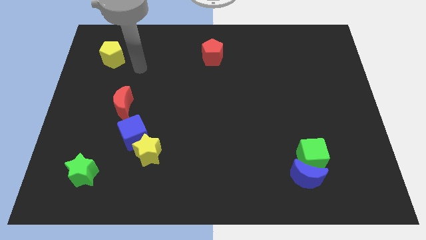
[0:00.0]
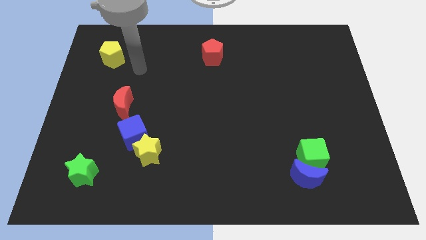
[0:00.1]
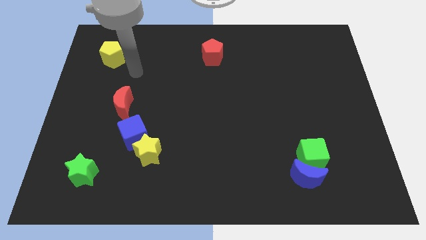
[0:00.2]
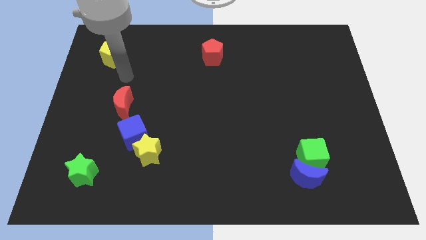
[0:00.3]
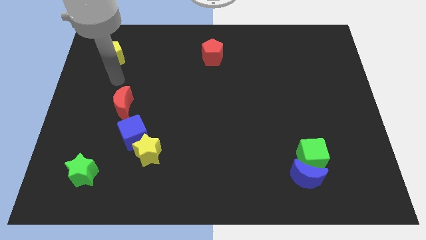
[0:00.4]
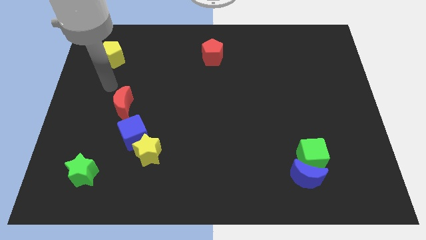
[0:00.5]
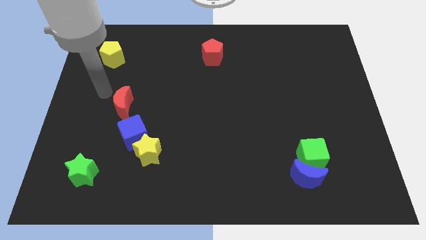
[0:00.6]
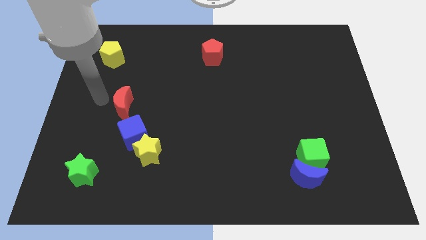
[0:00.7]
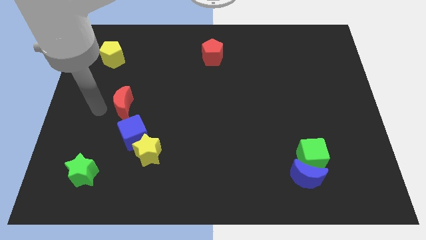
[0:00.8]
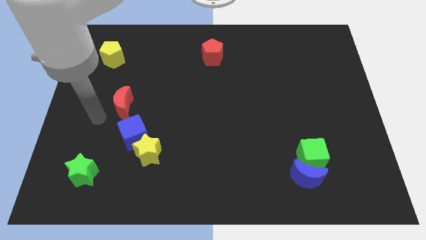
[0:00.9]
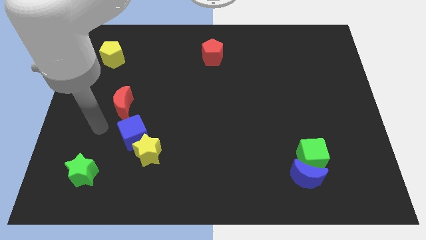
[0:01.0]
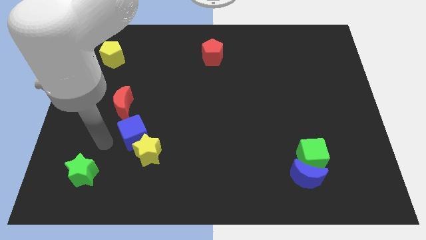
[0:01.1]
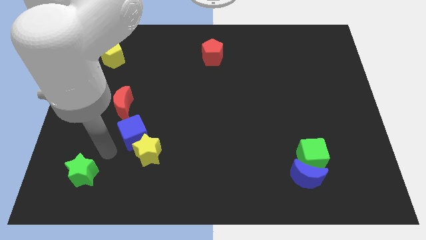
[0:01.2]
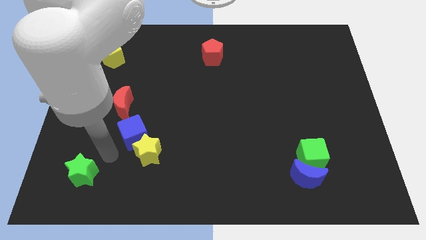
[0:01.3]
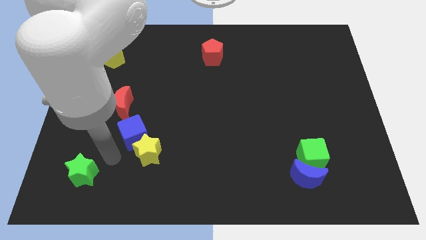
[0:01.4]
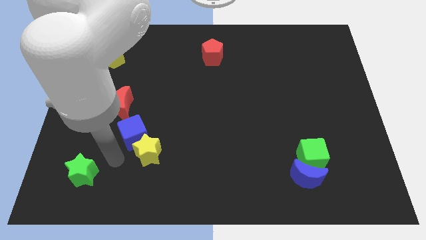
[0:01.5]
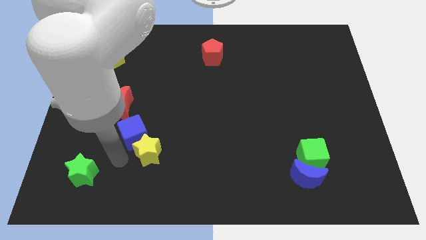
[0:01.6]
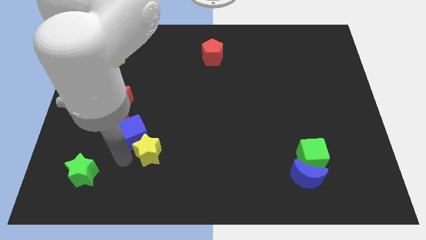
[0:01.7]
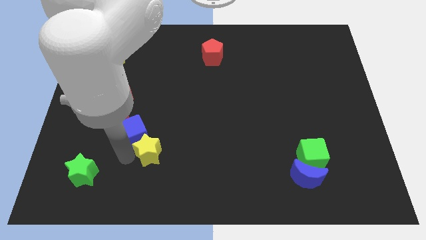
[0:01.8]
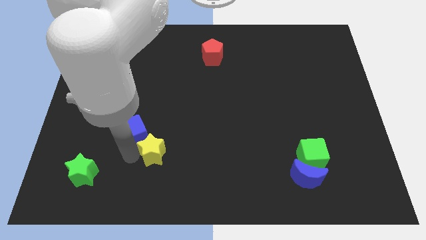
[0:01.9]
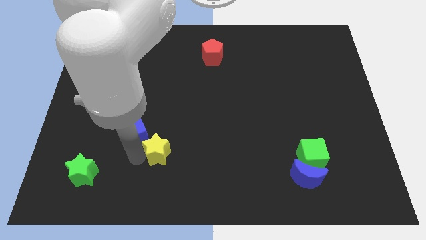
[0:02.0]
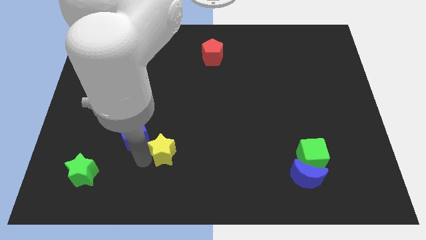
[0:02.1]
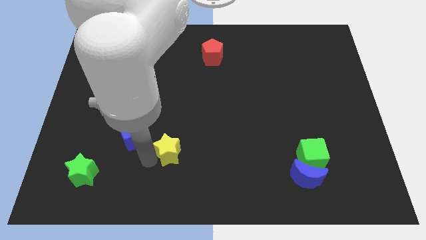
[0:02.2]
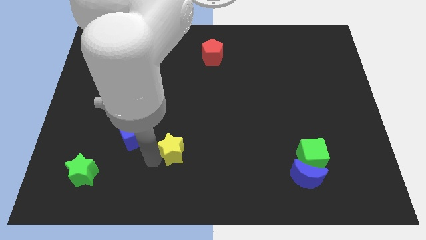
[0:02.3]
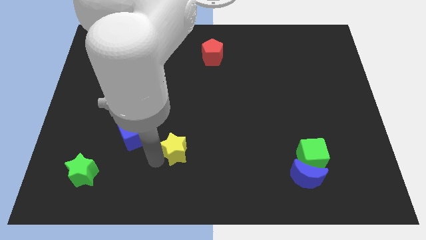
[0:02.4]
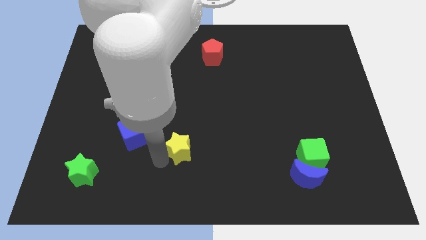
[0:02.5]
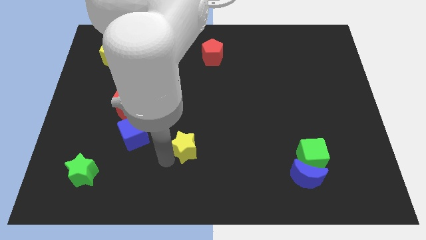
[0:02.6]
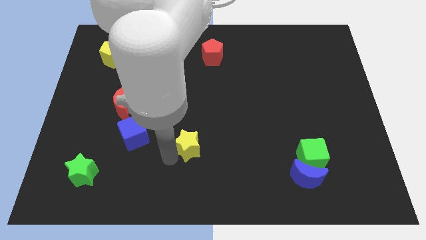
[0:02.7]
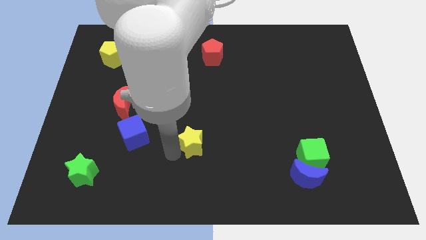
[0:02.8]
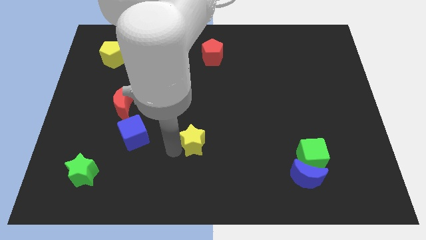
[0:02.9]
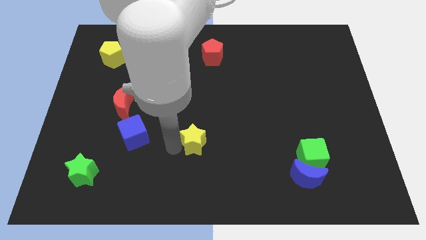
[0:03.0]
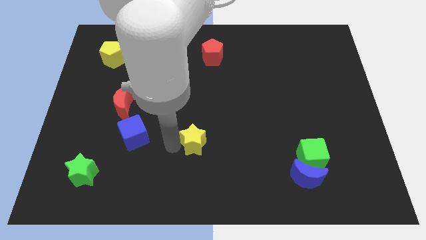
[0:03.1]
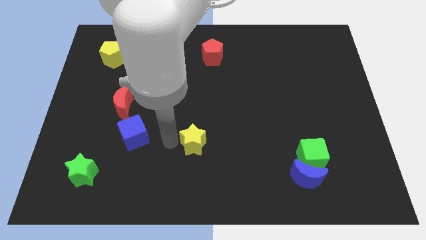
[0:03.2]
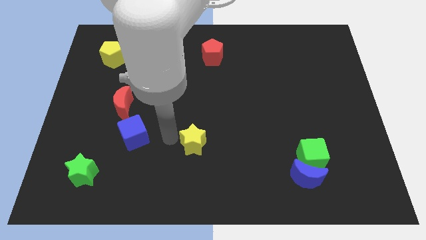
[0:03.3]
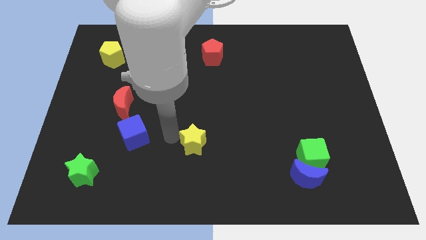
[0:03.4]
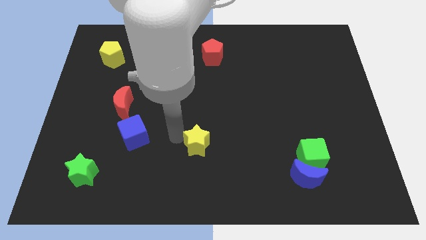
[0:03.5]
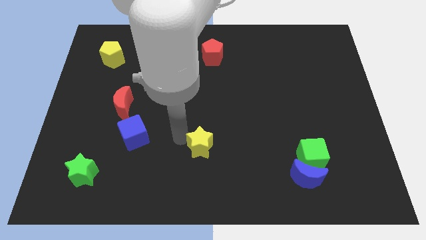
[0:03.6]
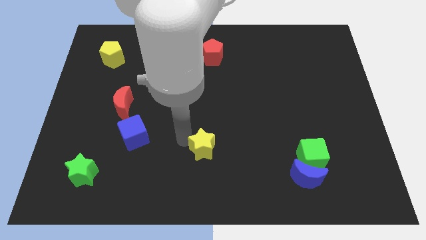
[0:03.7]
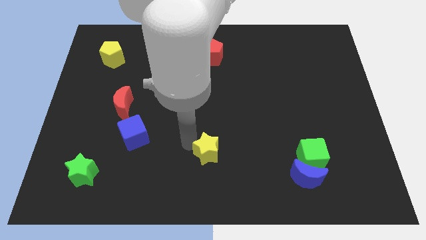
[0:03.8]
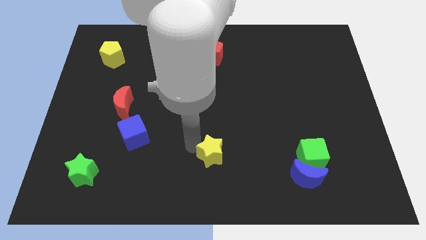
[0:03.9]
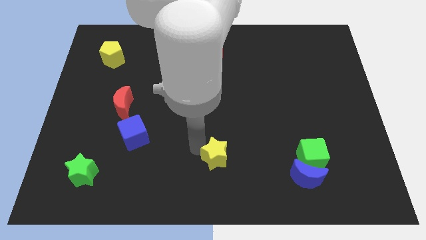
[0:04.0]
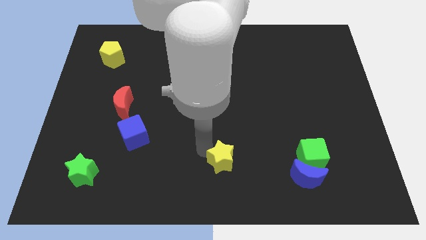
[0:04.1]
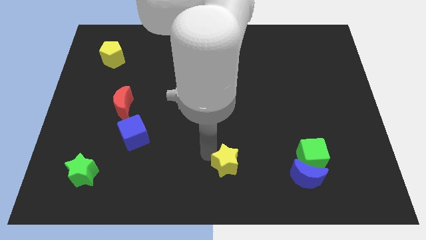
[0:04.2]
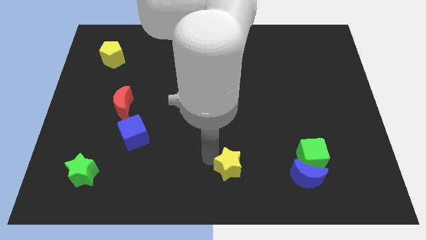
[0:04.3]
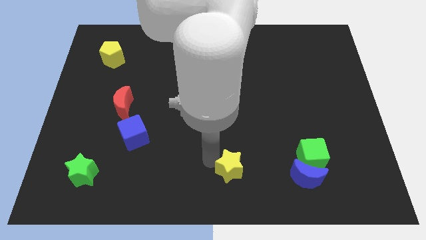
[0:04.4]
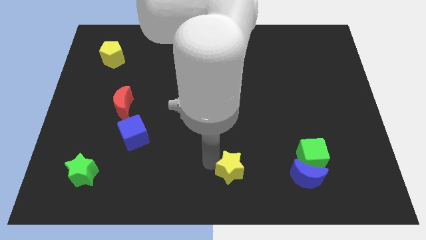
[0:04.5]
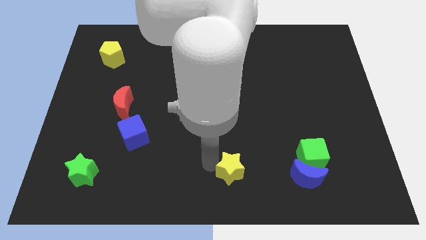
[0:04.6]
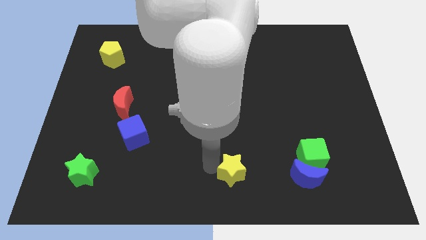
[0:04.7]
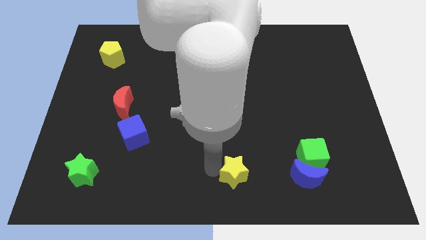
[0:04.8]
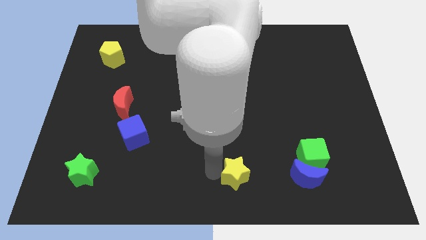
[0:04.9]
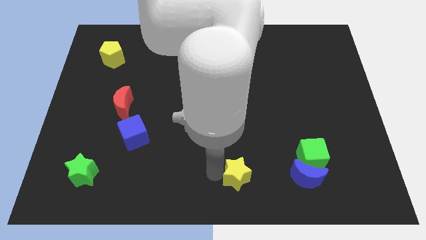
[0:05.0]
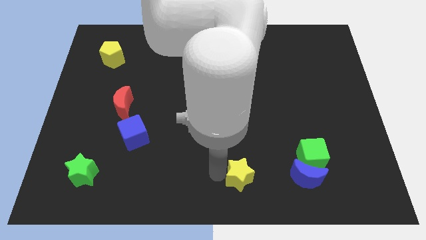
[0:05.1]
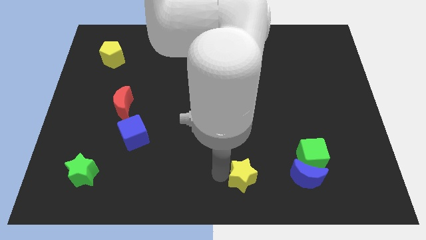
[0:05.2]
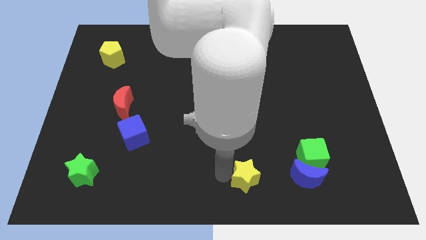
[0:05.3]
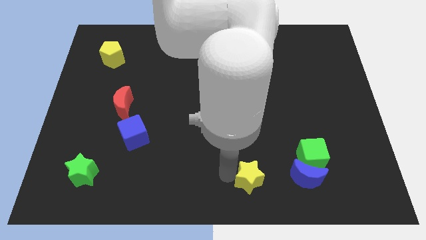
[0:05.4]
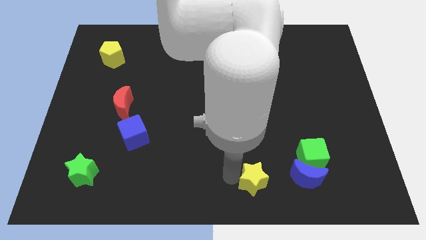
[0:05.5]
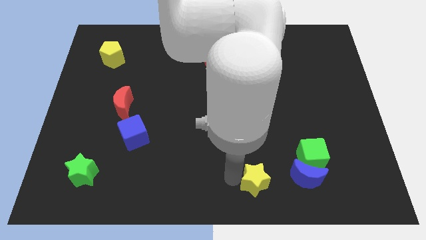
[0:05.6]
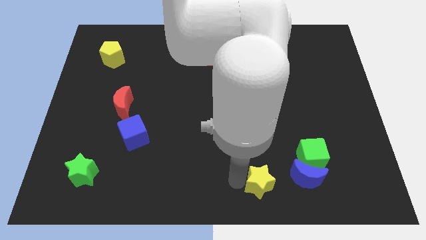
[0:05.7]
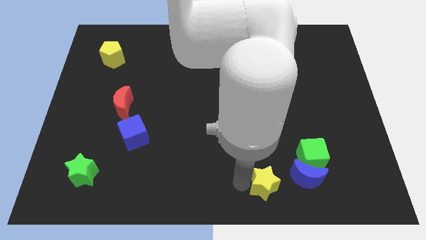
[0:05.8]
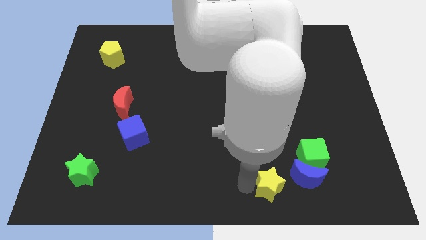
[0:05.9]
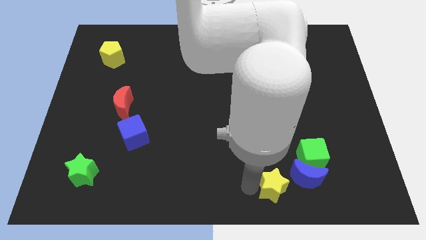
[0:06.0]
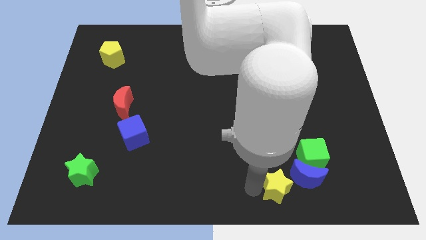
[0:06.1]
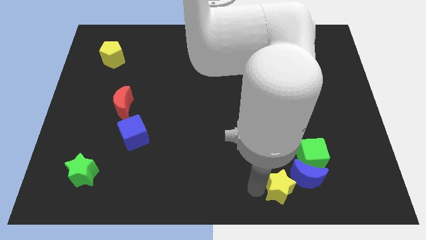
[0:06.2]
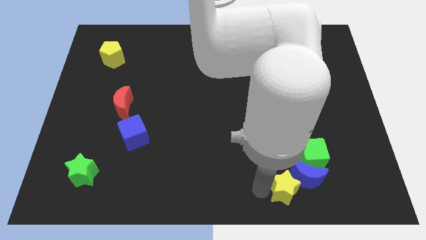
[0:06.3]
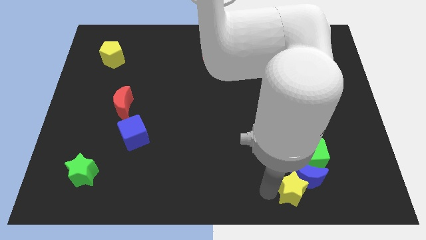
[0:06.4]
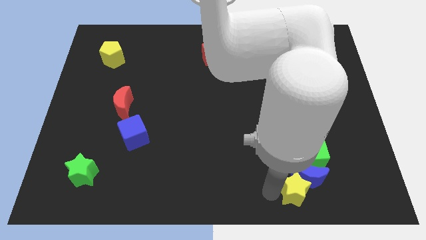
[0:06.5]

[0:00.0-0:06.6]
push the yellow star towards the blue moon

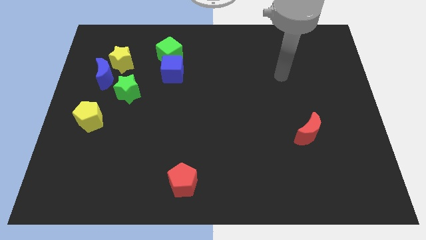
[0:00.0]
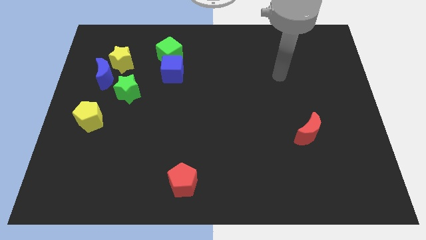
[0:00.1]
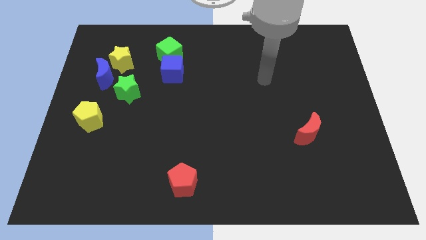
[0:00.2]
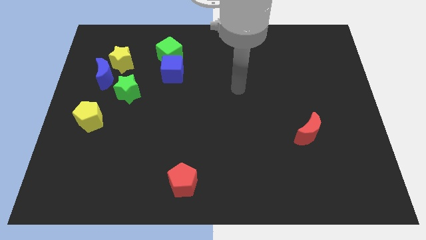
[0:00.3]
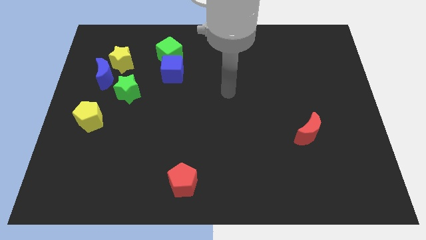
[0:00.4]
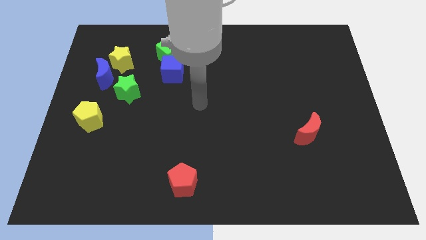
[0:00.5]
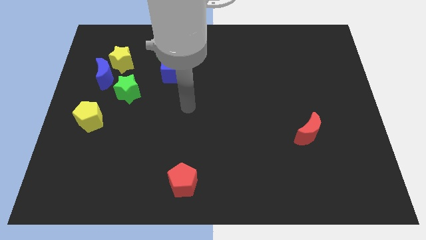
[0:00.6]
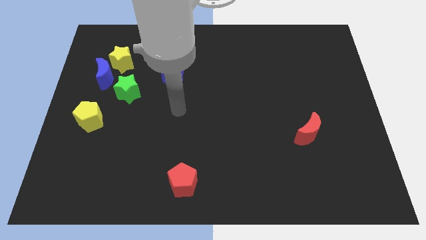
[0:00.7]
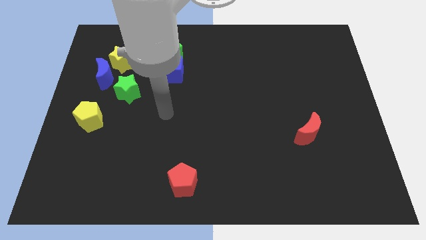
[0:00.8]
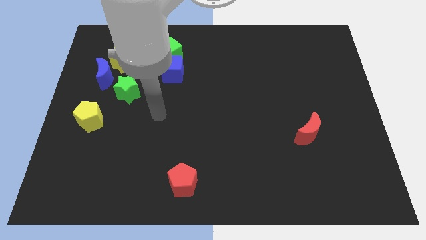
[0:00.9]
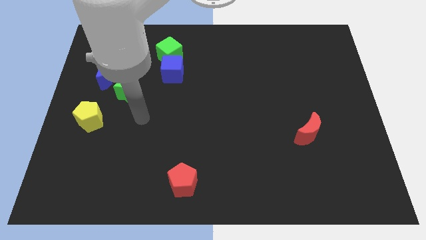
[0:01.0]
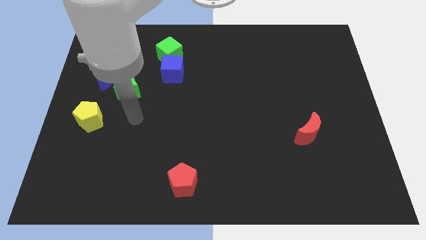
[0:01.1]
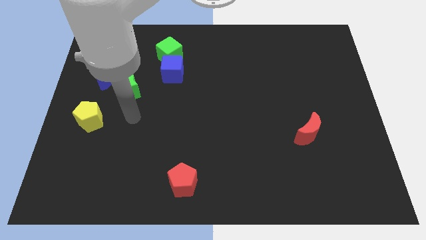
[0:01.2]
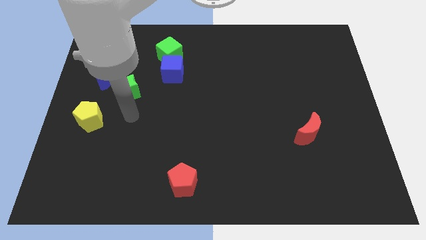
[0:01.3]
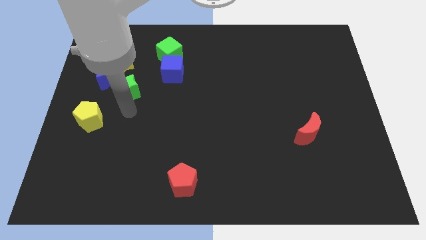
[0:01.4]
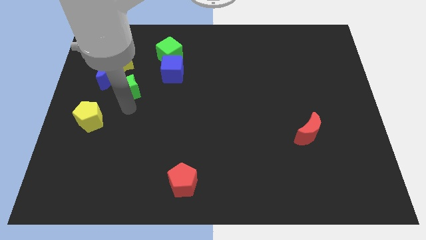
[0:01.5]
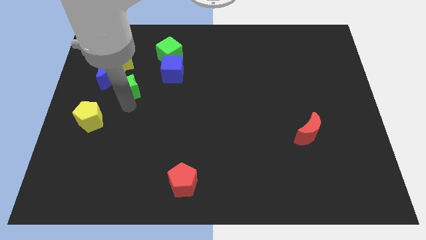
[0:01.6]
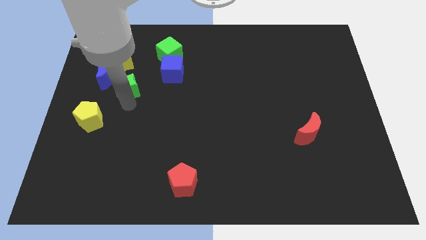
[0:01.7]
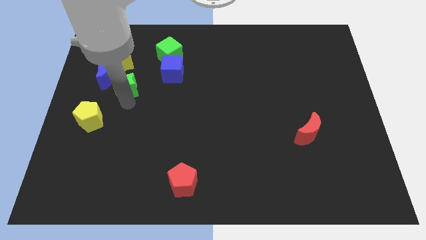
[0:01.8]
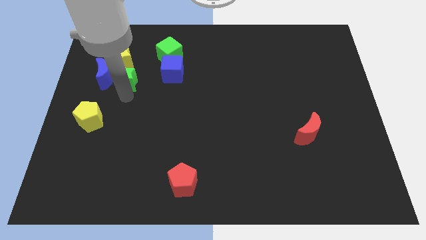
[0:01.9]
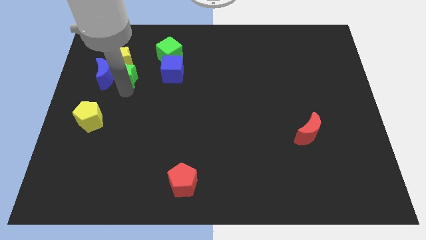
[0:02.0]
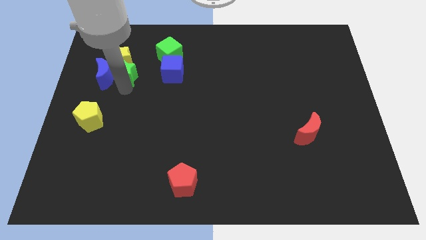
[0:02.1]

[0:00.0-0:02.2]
move the green star close to the yellow star
